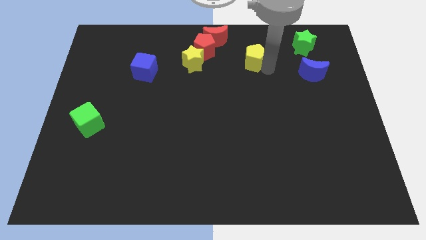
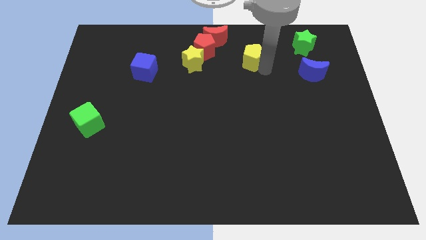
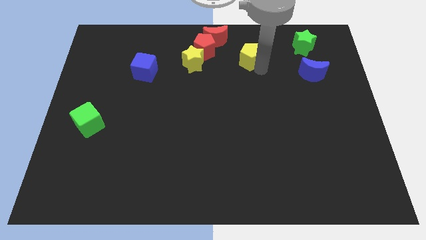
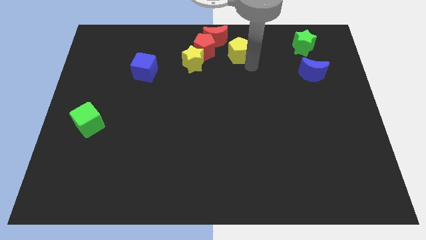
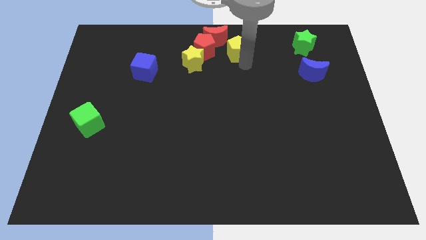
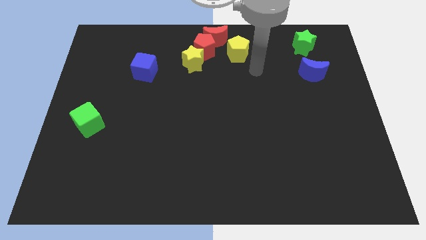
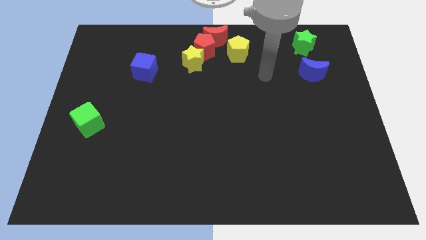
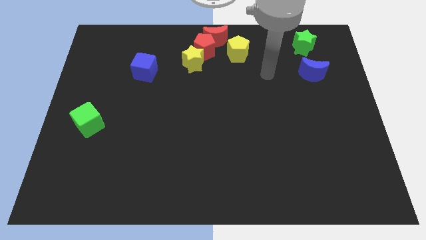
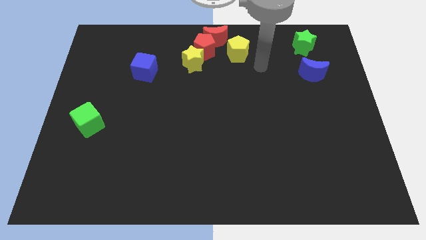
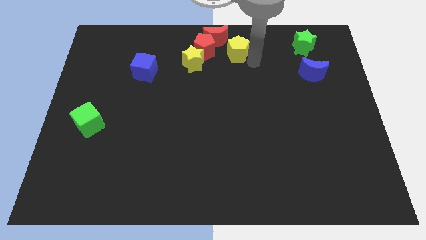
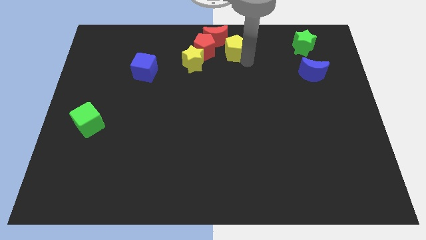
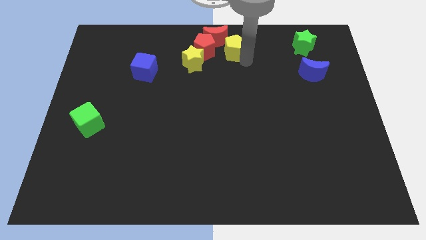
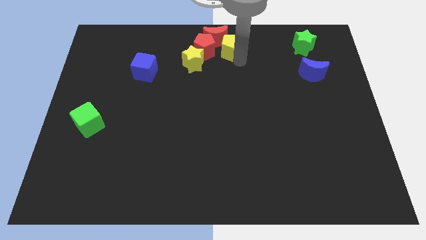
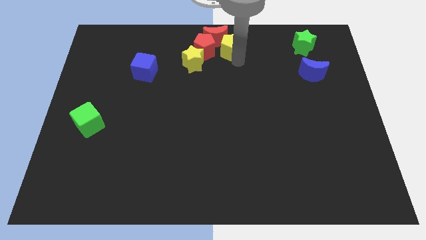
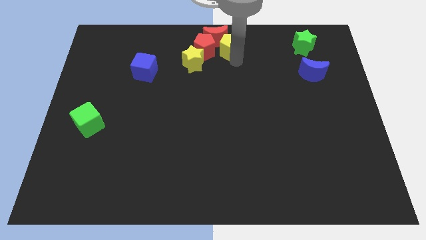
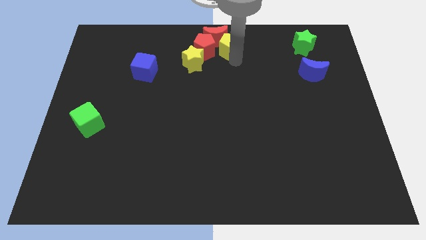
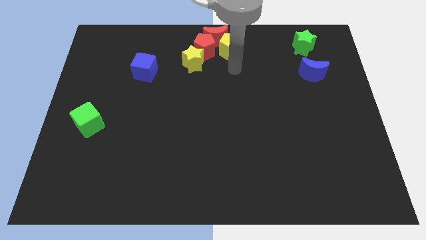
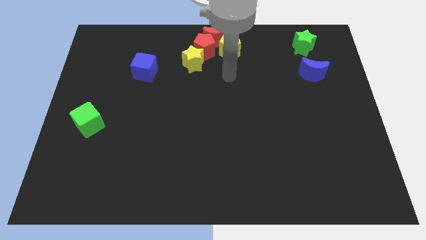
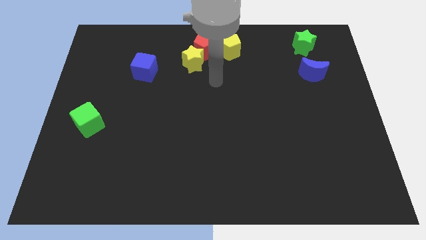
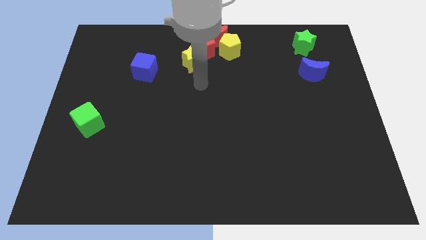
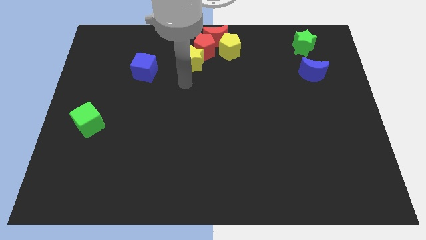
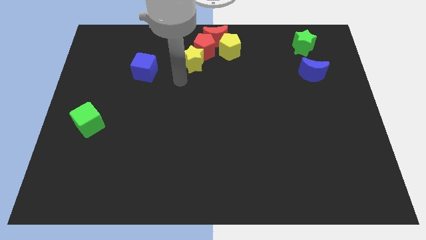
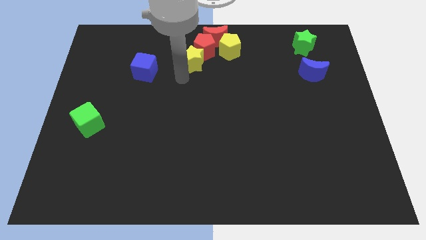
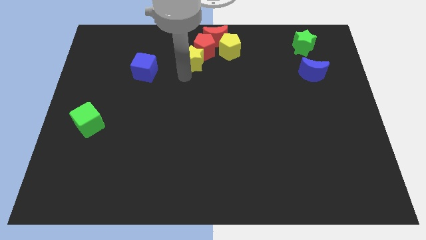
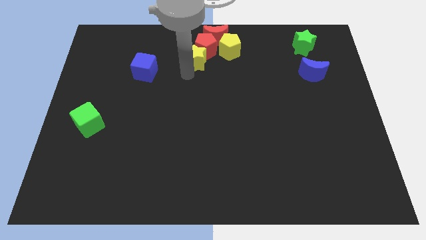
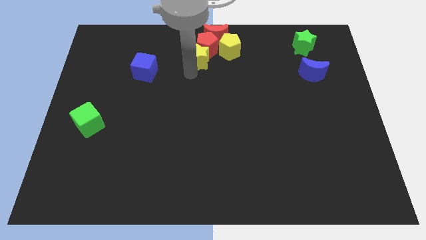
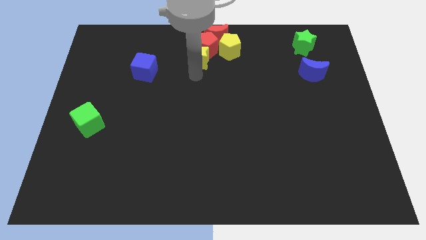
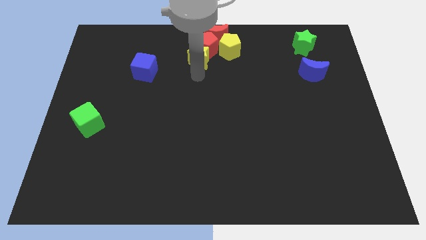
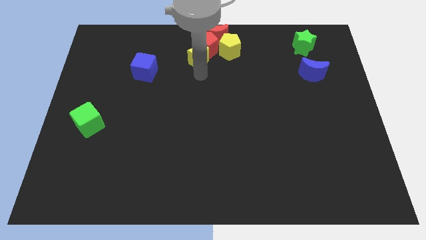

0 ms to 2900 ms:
place yellow pentagon into red crescent red pentagon and yellow star

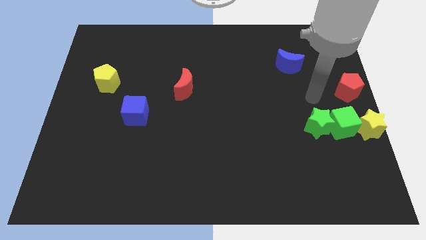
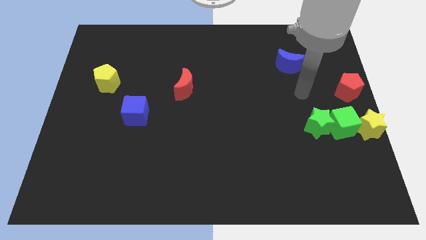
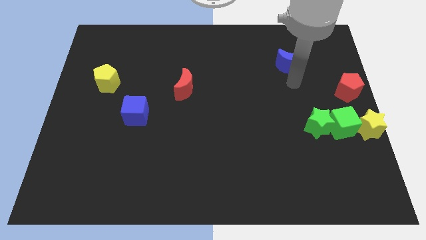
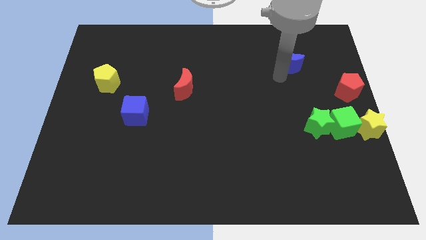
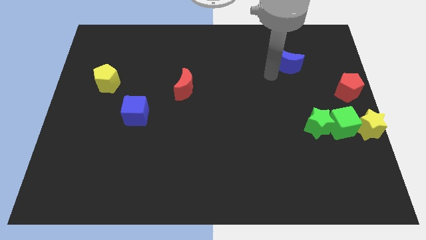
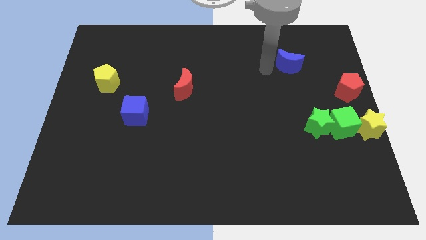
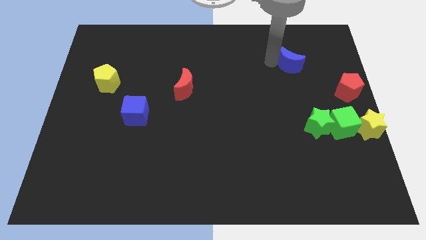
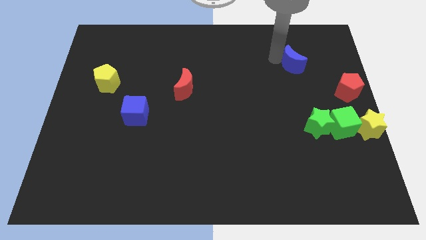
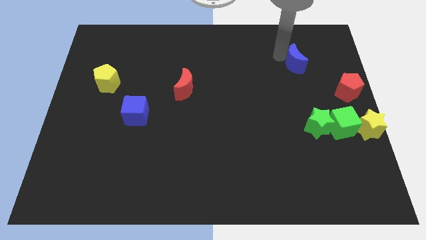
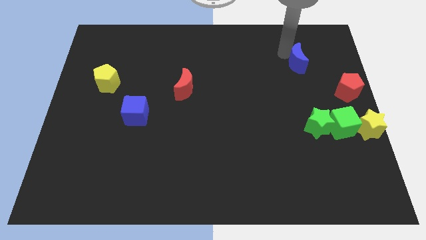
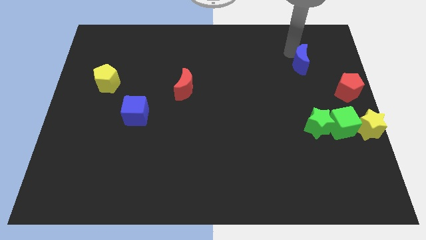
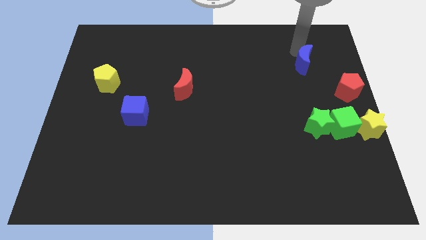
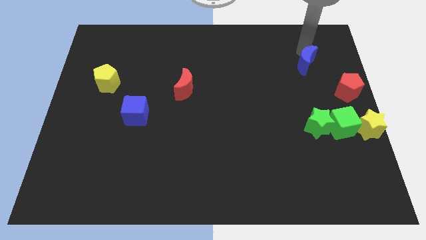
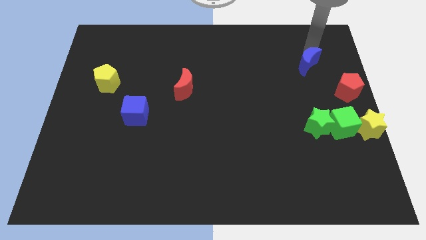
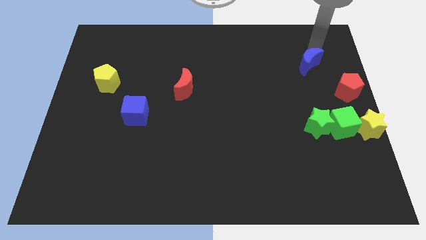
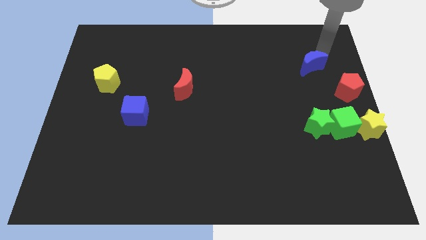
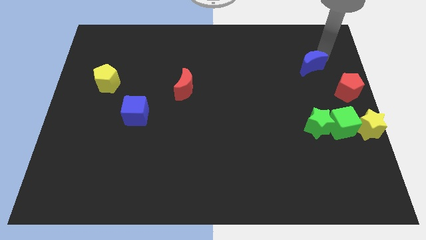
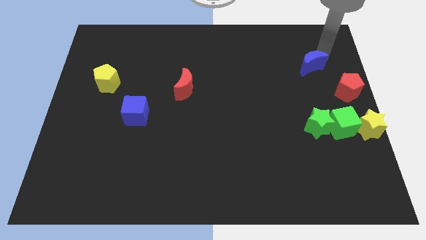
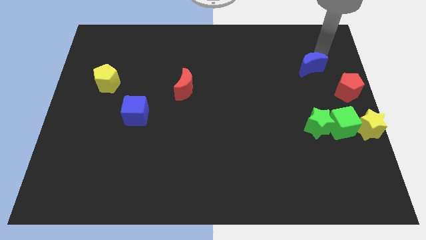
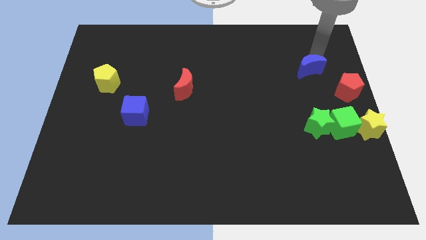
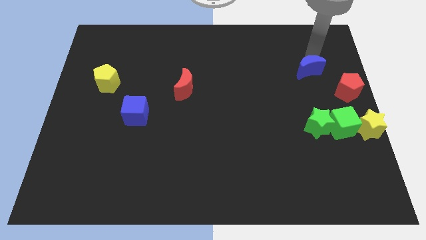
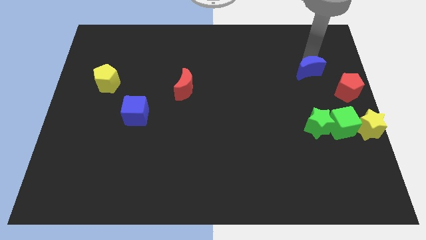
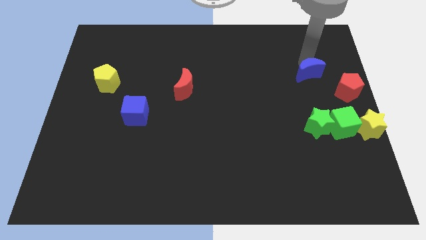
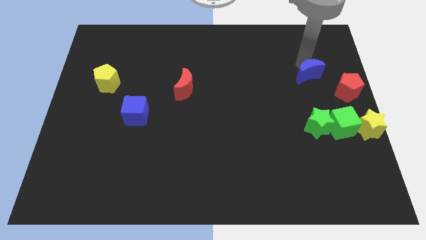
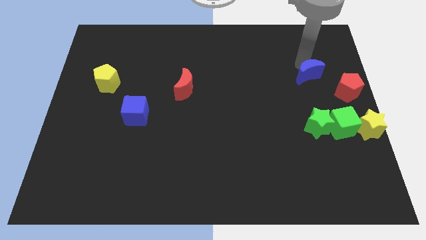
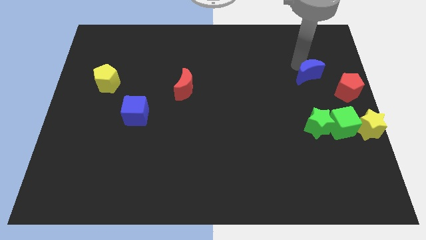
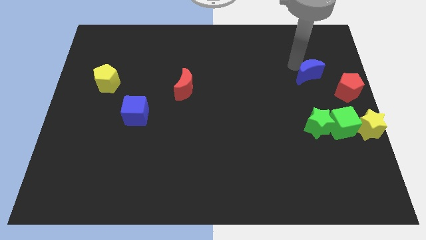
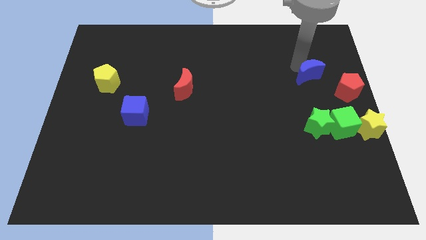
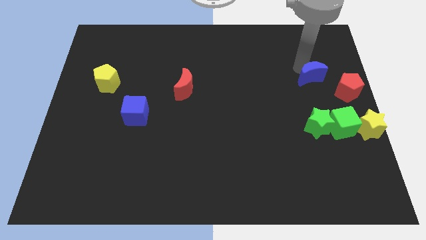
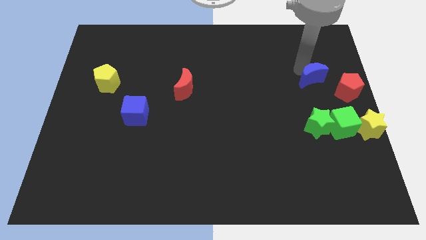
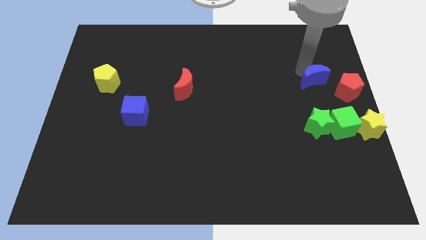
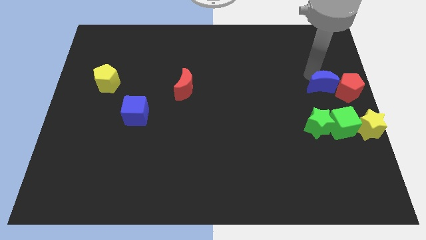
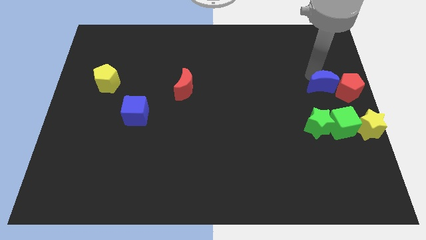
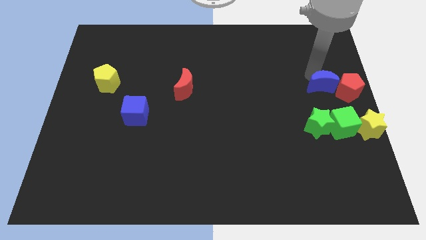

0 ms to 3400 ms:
push the blue crescent to the left of the red pentagon

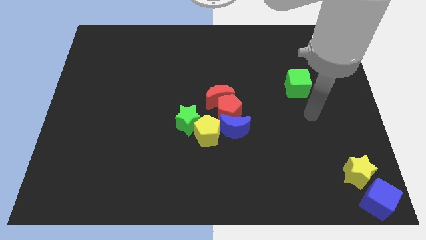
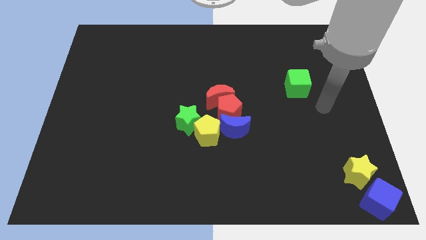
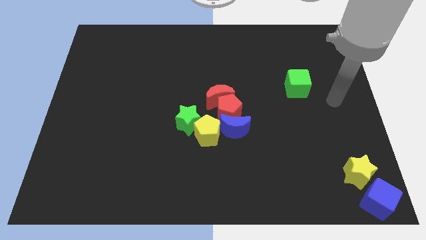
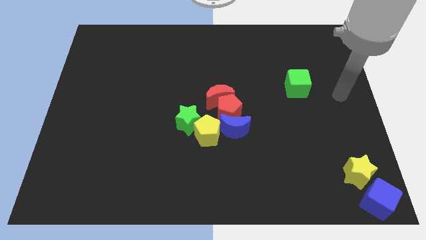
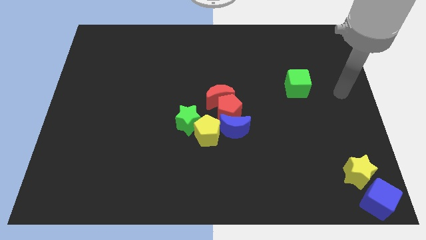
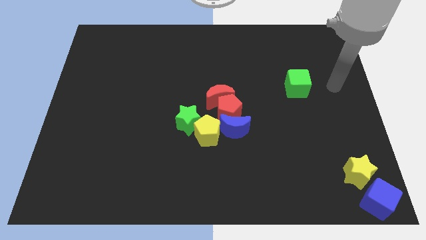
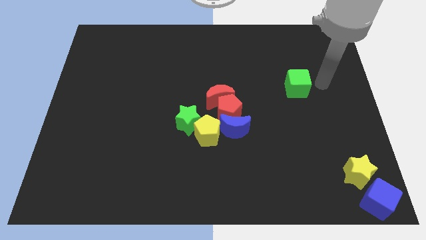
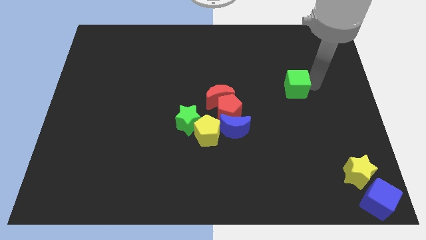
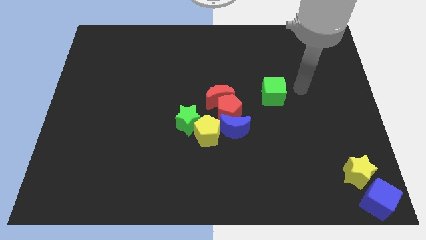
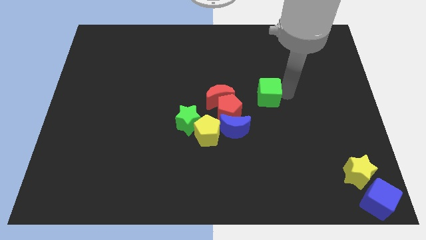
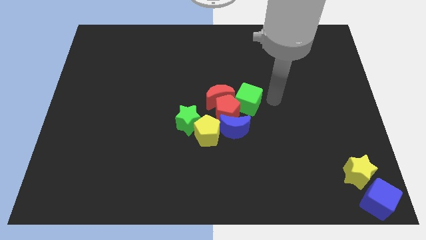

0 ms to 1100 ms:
move the green cube close to top right of the red pentagon

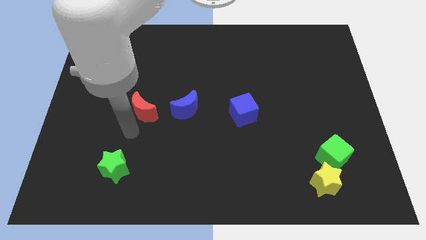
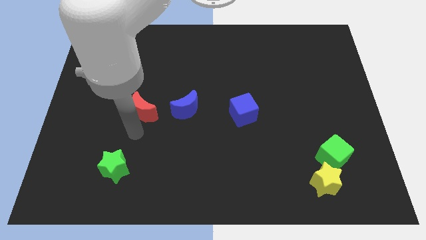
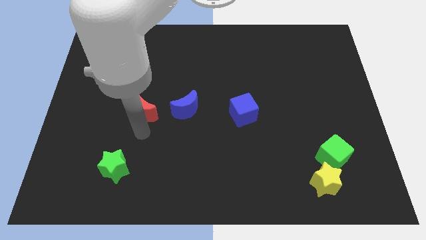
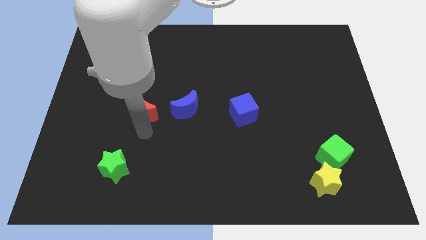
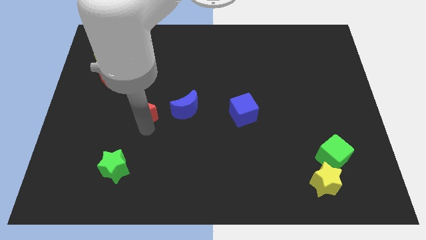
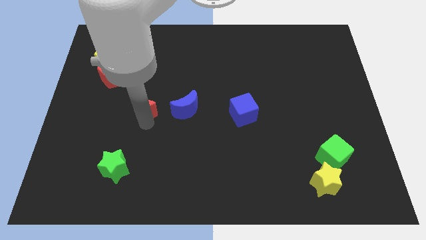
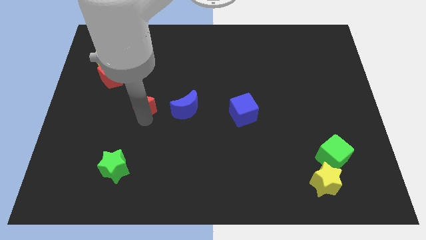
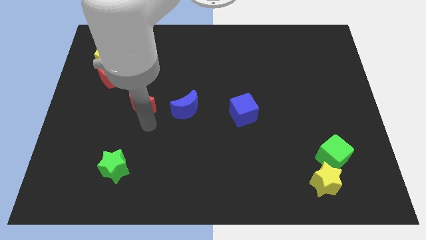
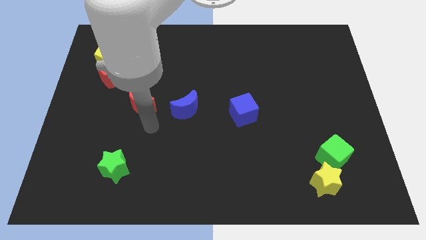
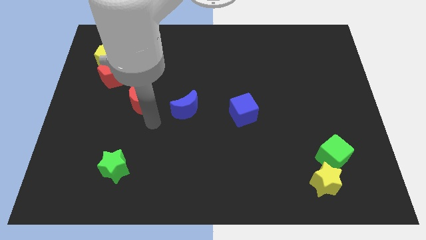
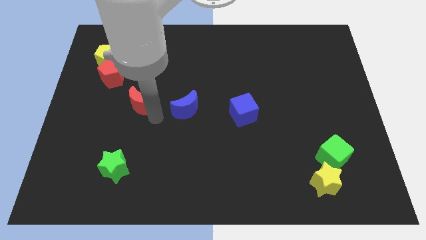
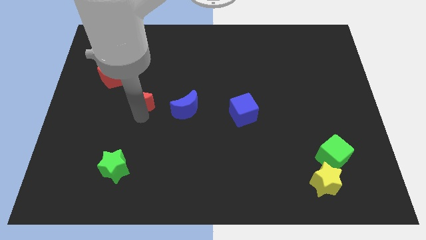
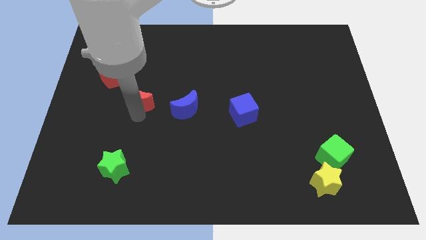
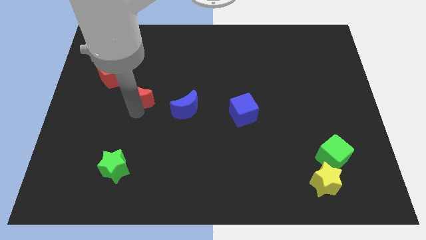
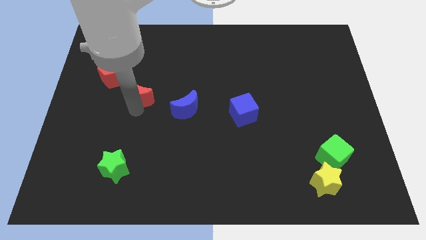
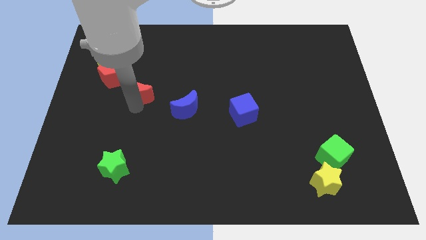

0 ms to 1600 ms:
put the red crescent in between the red pentagon and blue crescent
